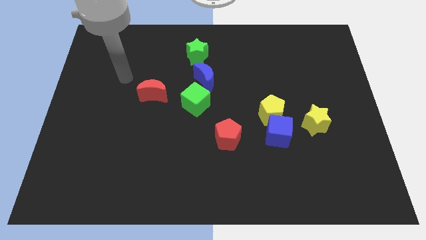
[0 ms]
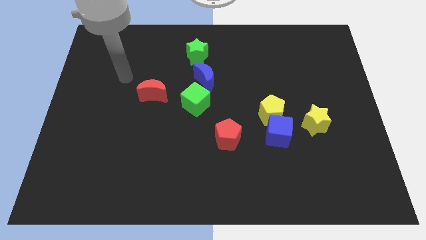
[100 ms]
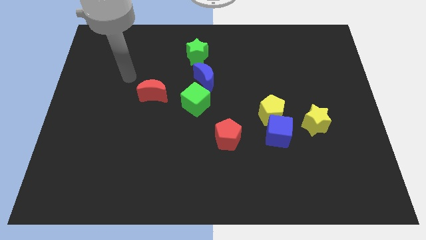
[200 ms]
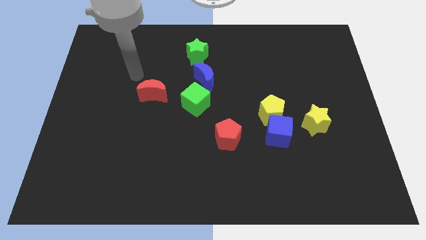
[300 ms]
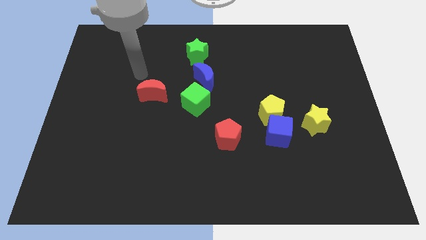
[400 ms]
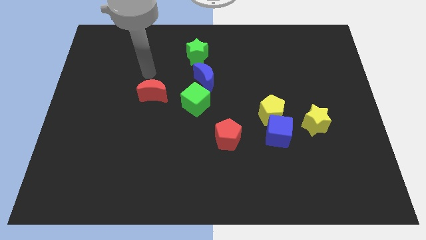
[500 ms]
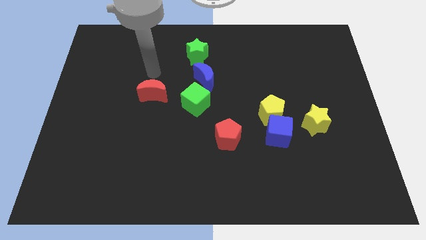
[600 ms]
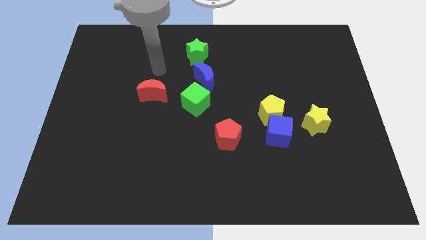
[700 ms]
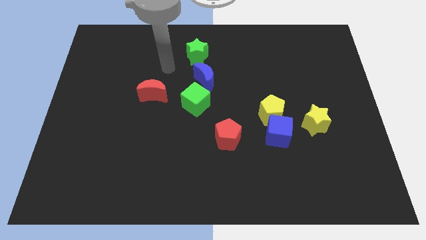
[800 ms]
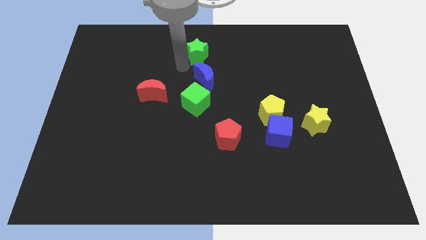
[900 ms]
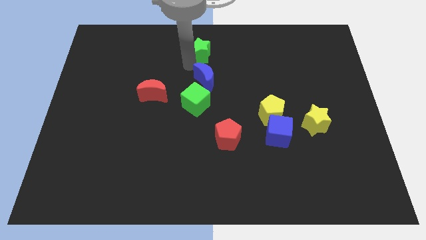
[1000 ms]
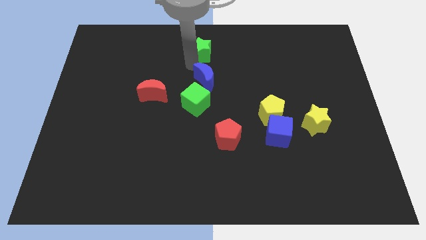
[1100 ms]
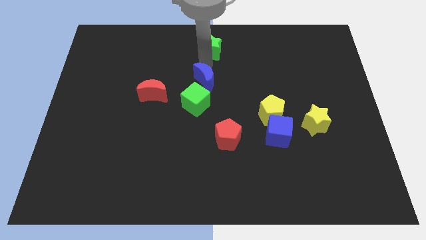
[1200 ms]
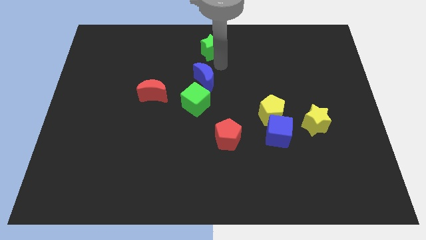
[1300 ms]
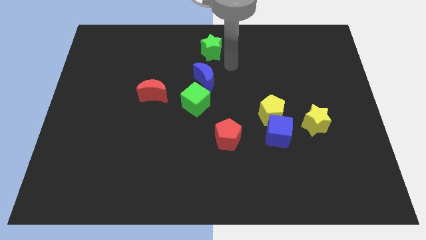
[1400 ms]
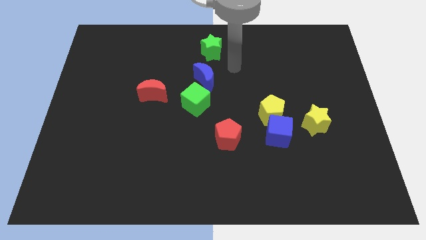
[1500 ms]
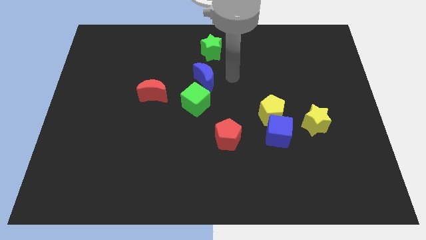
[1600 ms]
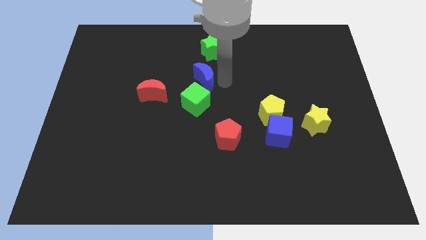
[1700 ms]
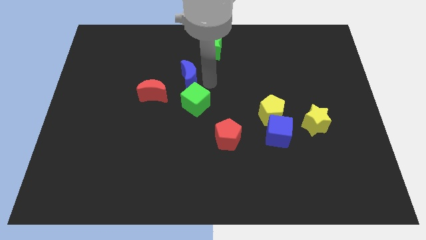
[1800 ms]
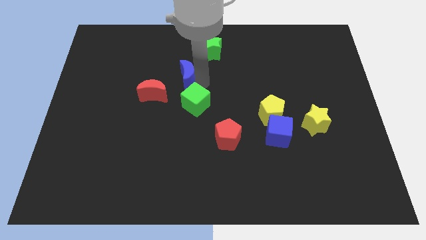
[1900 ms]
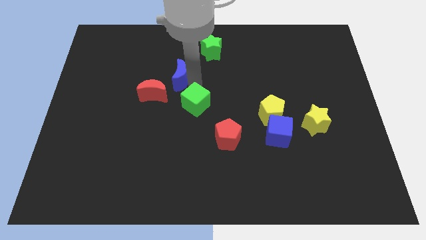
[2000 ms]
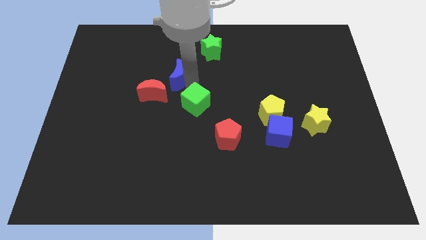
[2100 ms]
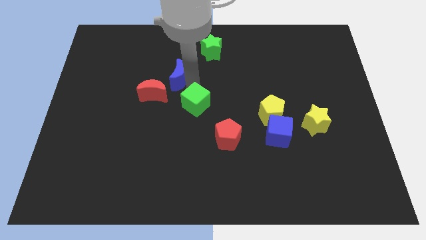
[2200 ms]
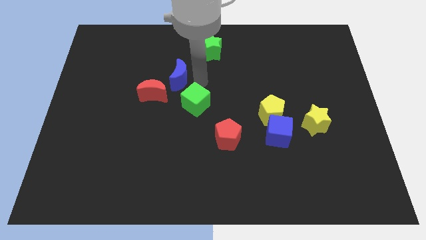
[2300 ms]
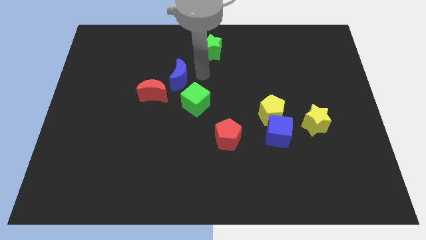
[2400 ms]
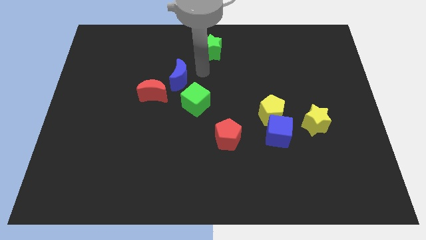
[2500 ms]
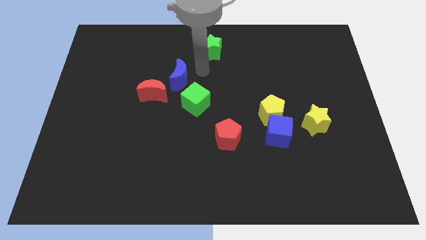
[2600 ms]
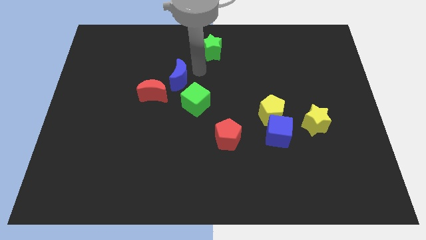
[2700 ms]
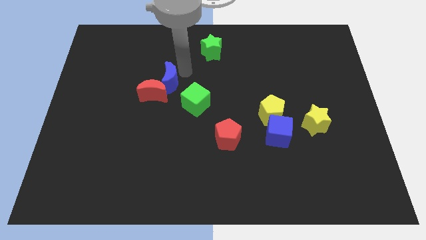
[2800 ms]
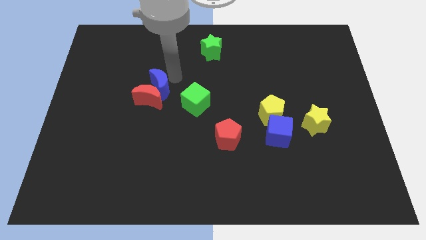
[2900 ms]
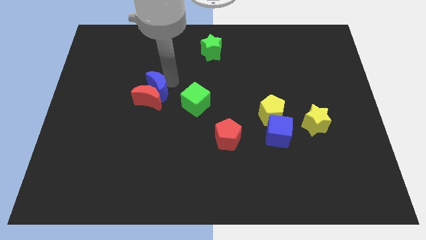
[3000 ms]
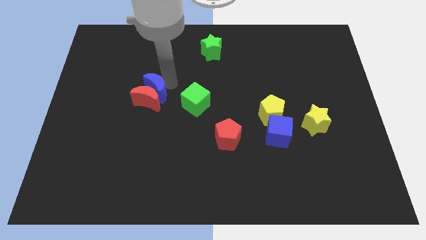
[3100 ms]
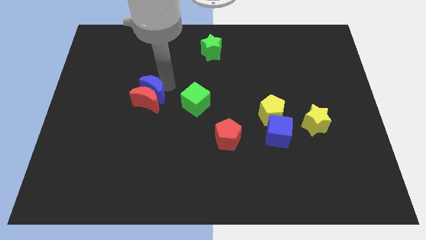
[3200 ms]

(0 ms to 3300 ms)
push blue moon into red moon

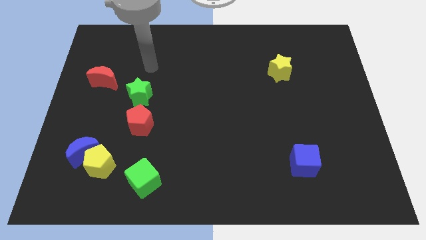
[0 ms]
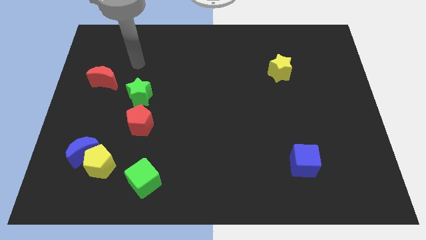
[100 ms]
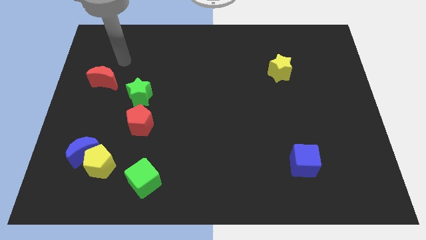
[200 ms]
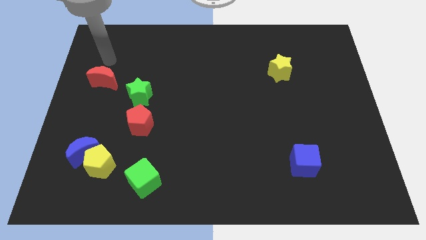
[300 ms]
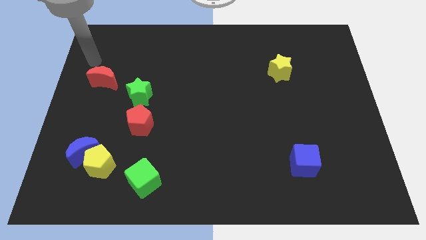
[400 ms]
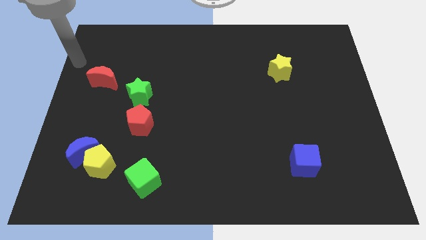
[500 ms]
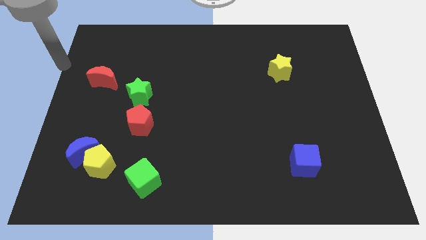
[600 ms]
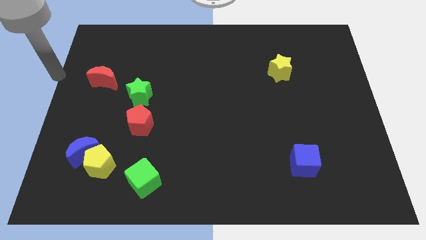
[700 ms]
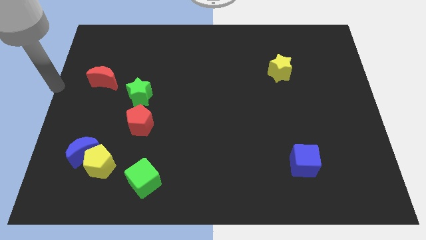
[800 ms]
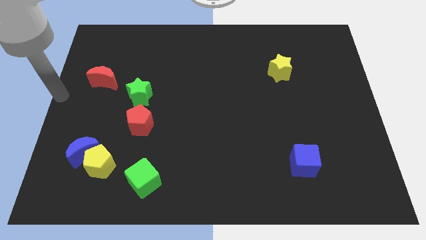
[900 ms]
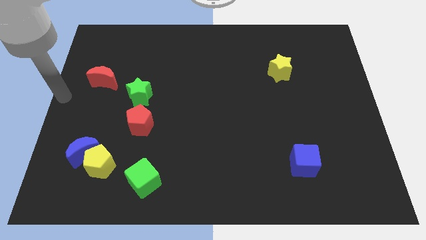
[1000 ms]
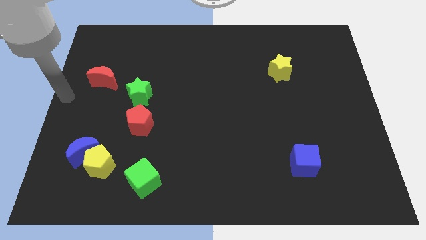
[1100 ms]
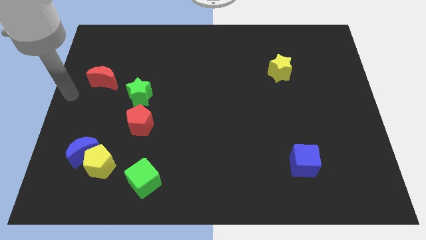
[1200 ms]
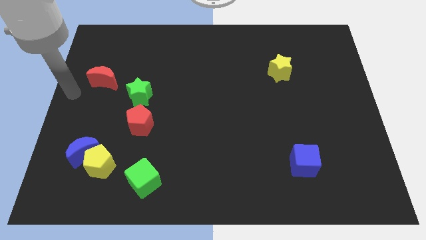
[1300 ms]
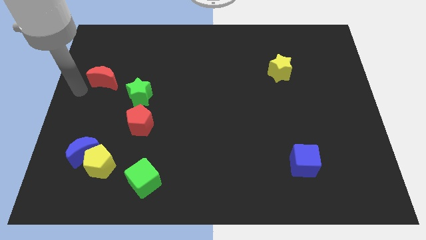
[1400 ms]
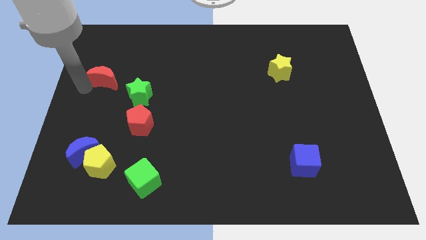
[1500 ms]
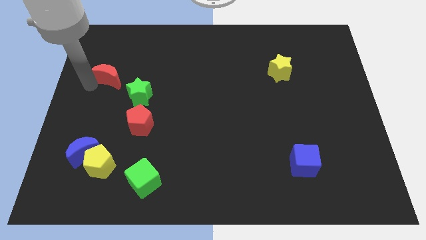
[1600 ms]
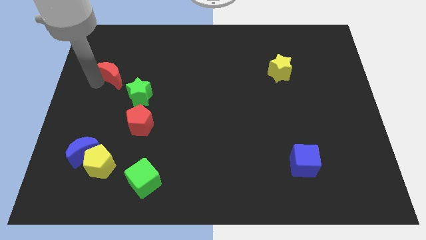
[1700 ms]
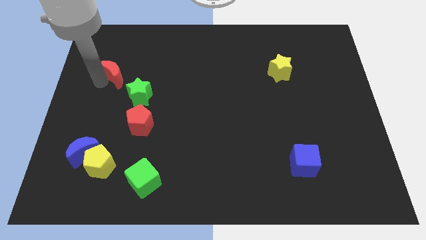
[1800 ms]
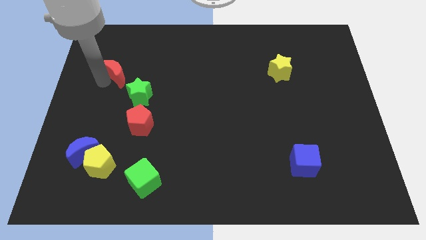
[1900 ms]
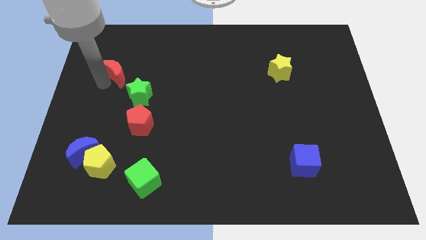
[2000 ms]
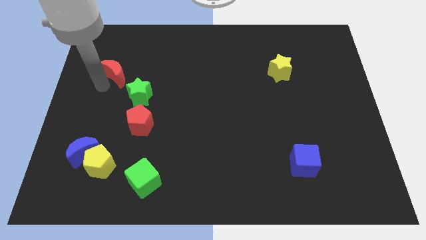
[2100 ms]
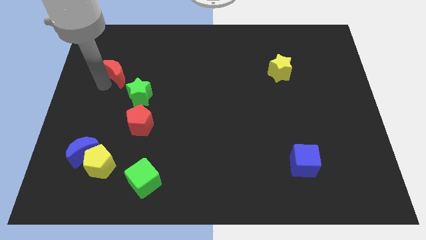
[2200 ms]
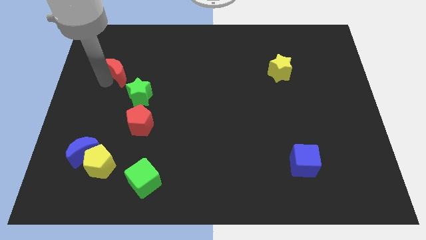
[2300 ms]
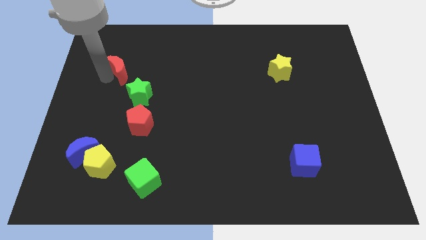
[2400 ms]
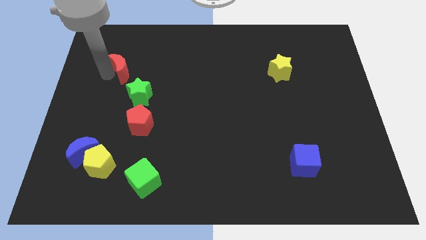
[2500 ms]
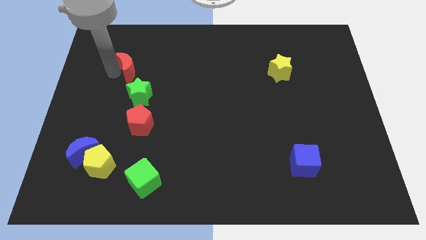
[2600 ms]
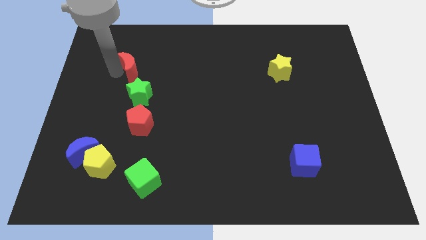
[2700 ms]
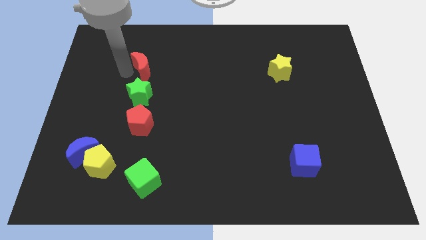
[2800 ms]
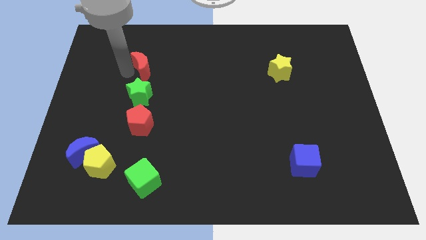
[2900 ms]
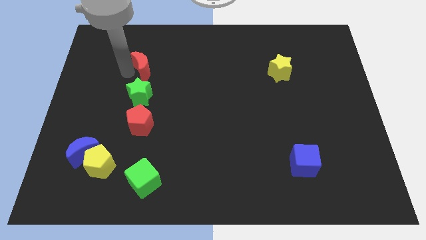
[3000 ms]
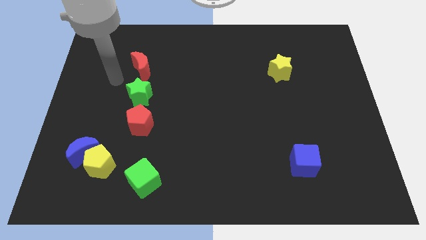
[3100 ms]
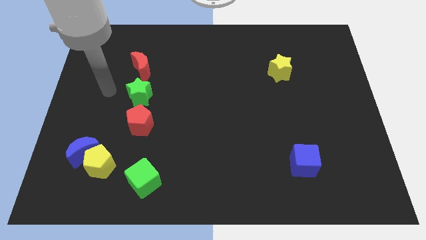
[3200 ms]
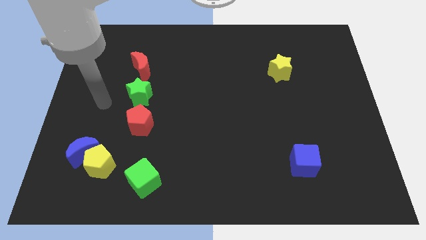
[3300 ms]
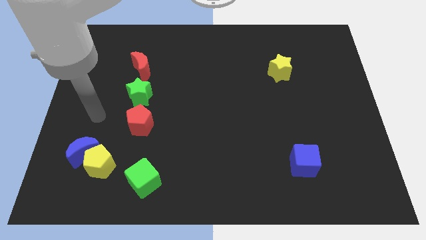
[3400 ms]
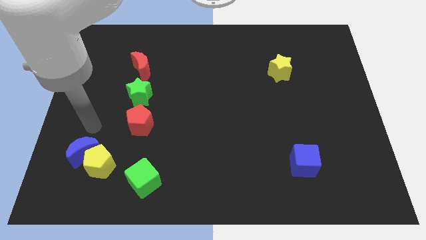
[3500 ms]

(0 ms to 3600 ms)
place the red crescent above the green star

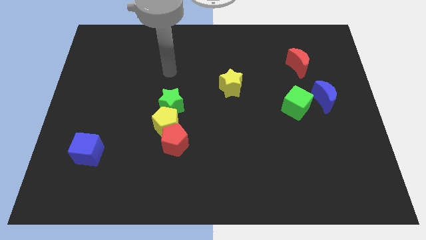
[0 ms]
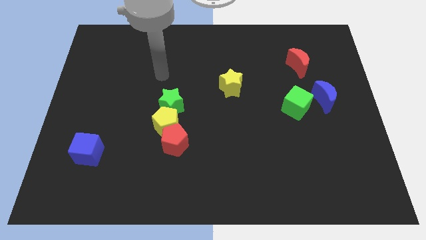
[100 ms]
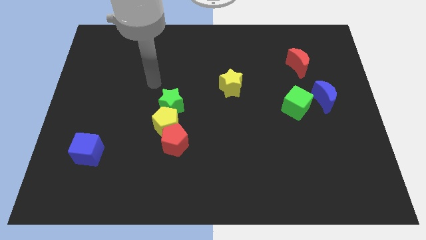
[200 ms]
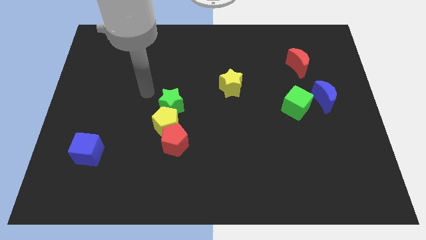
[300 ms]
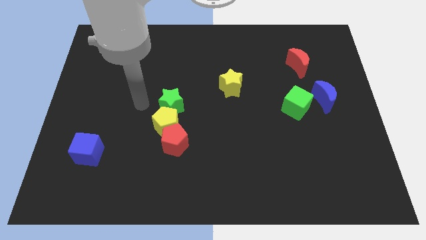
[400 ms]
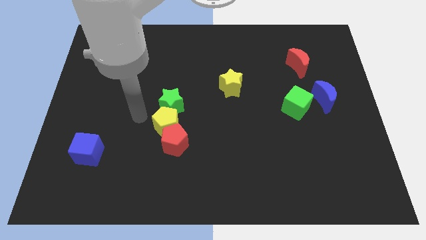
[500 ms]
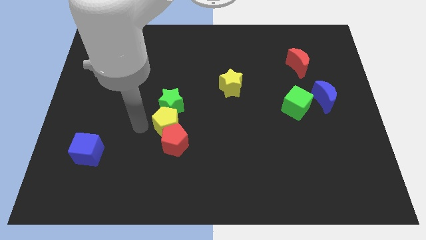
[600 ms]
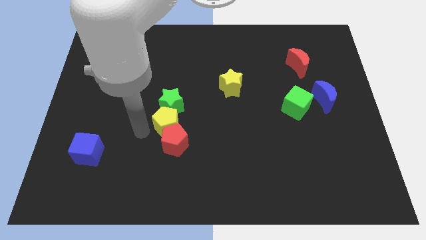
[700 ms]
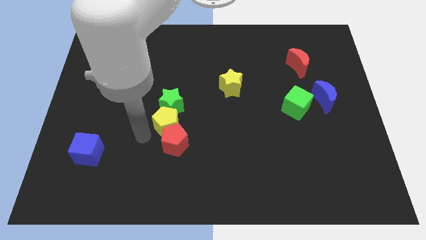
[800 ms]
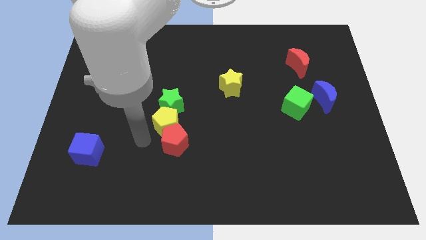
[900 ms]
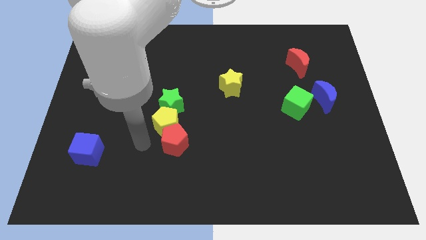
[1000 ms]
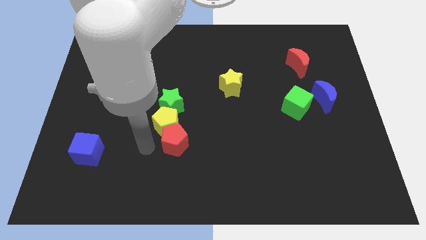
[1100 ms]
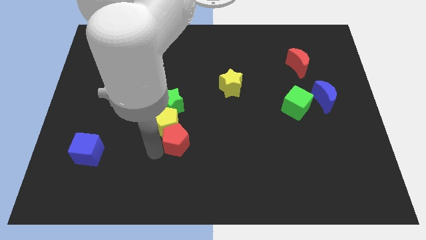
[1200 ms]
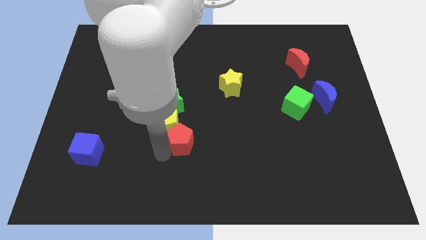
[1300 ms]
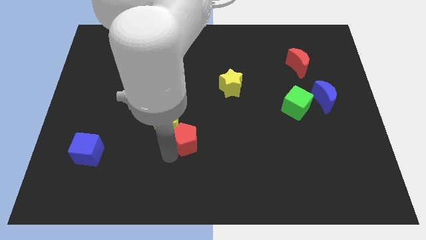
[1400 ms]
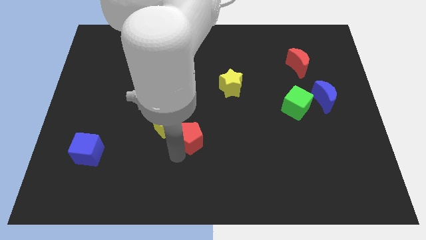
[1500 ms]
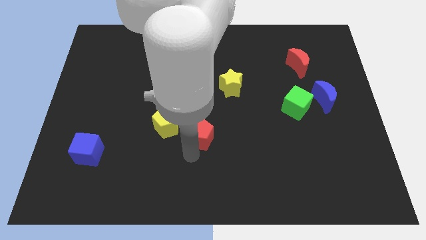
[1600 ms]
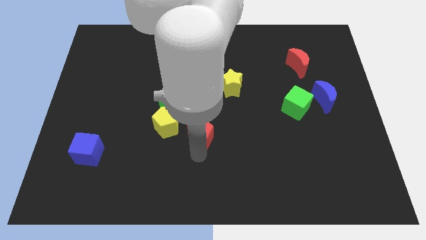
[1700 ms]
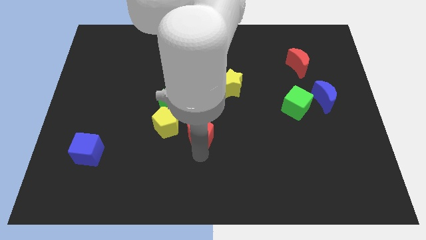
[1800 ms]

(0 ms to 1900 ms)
move the red pentagon slightly right

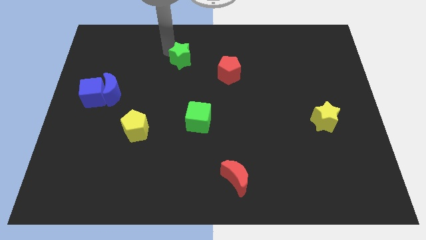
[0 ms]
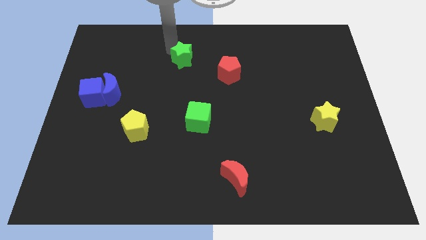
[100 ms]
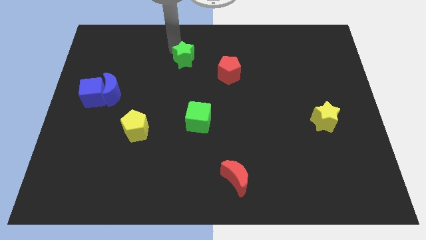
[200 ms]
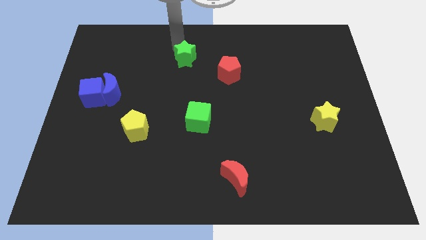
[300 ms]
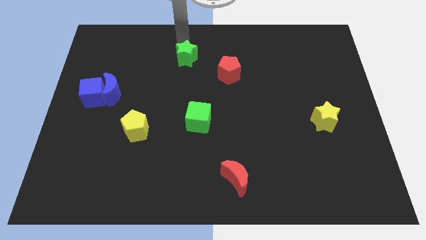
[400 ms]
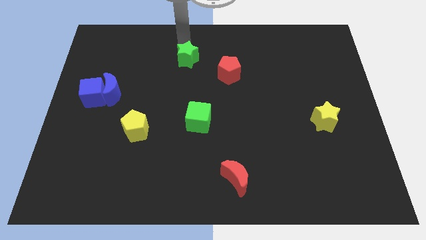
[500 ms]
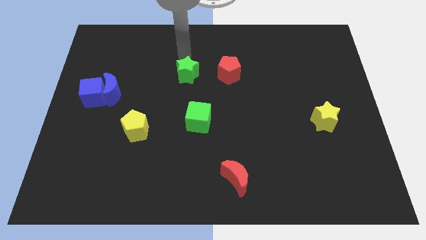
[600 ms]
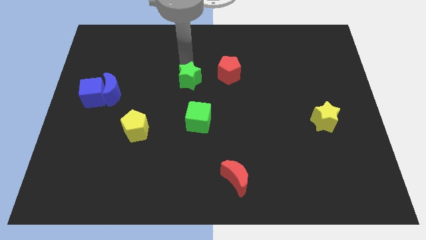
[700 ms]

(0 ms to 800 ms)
place the green star in between the blue crescent and red pentagon
